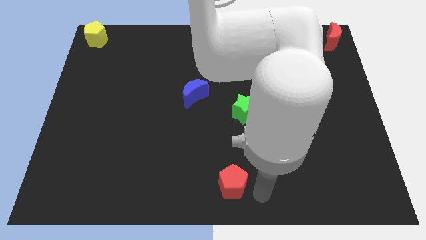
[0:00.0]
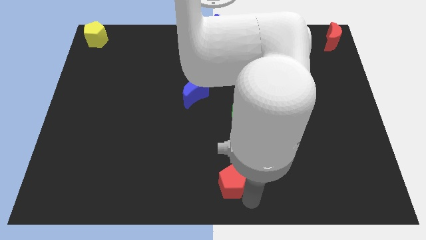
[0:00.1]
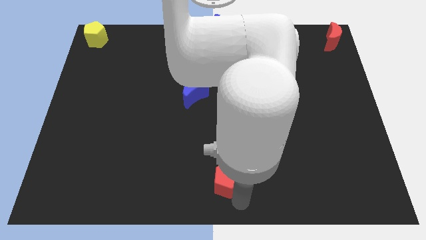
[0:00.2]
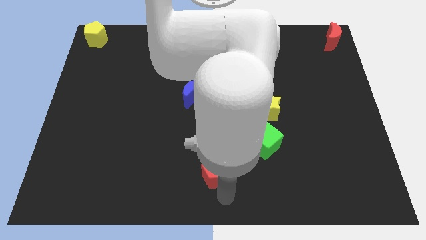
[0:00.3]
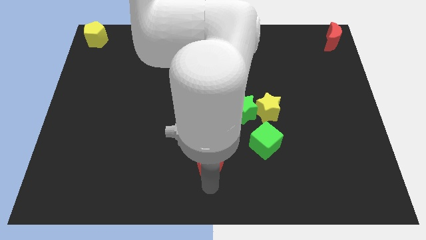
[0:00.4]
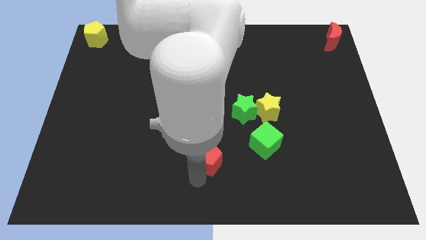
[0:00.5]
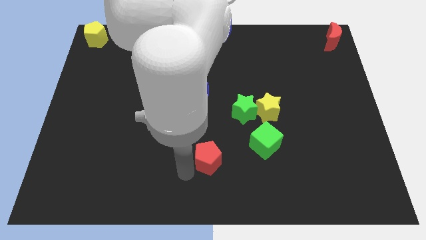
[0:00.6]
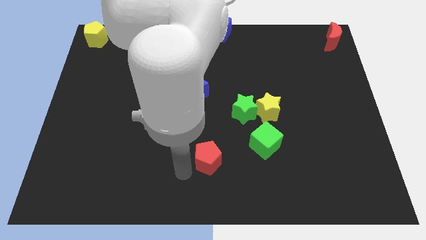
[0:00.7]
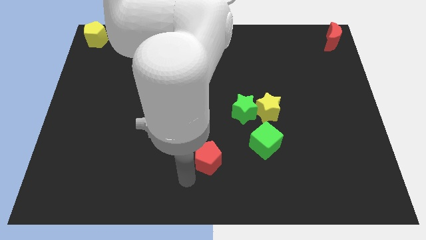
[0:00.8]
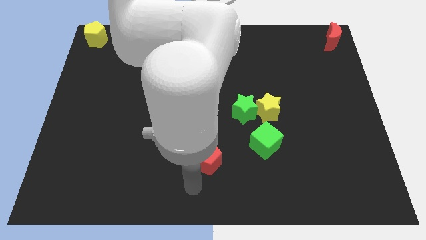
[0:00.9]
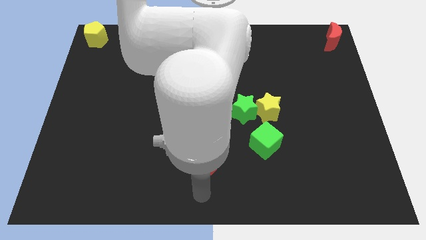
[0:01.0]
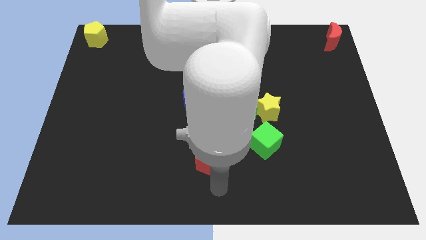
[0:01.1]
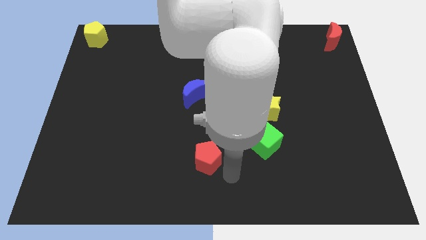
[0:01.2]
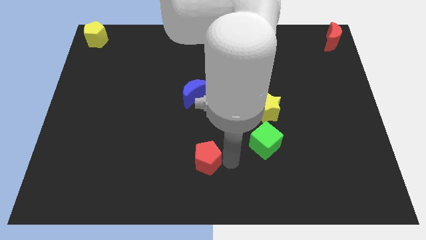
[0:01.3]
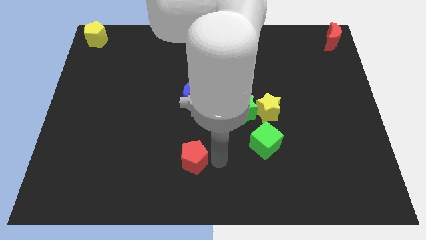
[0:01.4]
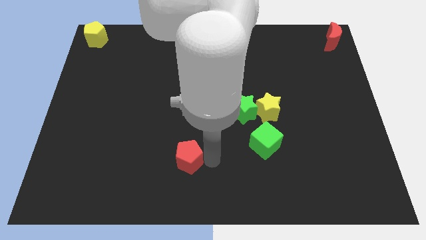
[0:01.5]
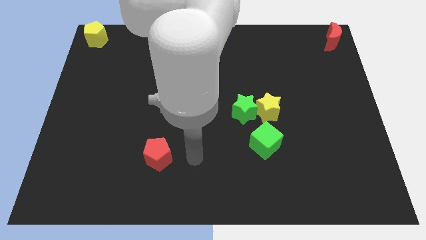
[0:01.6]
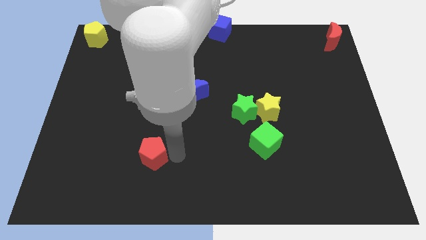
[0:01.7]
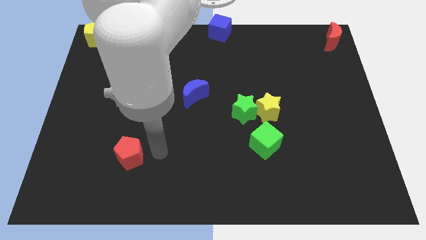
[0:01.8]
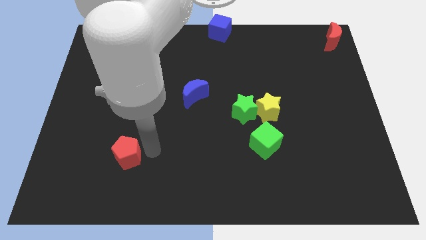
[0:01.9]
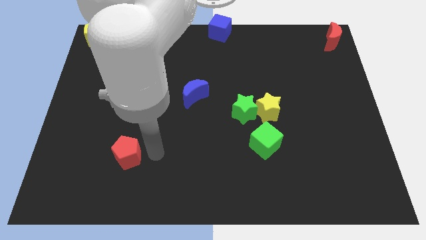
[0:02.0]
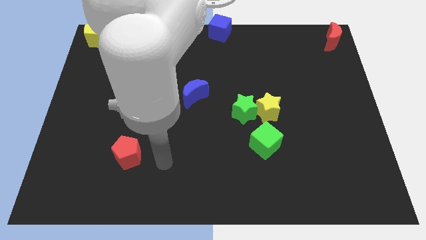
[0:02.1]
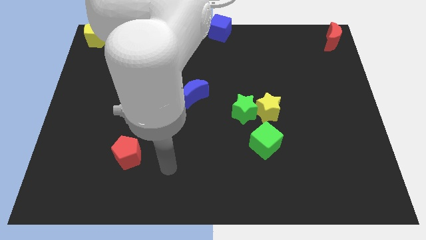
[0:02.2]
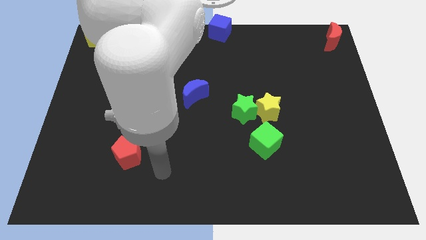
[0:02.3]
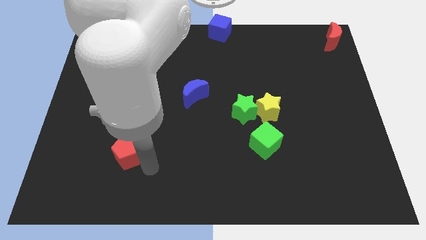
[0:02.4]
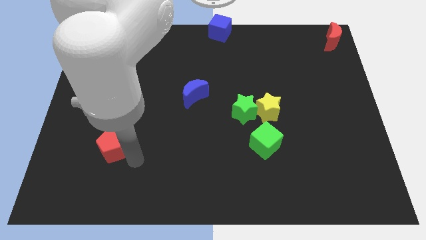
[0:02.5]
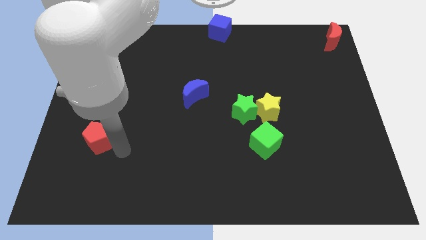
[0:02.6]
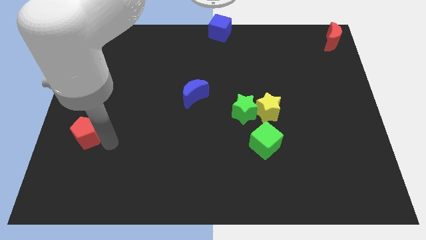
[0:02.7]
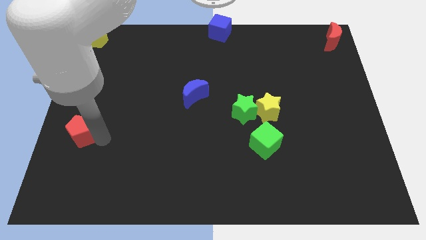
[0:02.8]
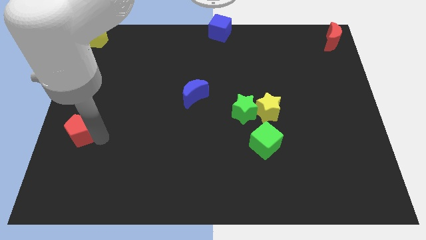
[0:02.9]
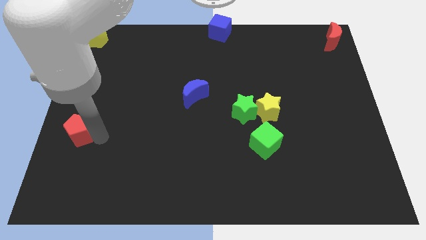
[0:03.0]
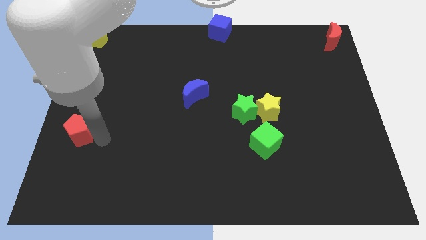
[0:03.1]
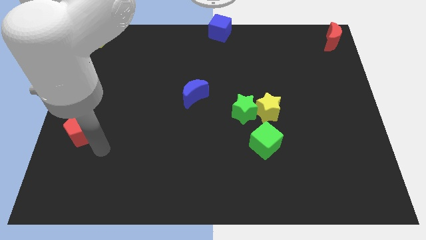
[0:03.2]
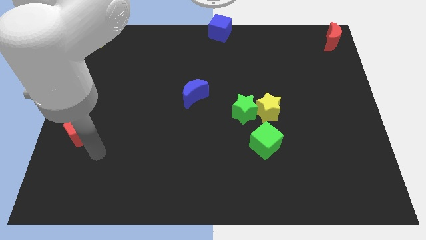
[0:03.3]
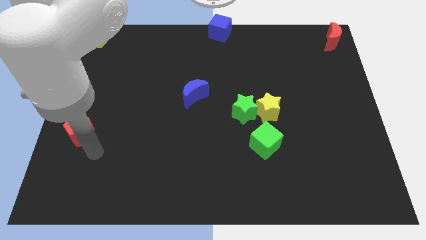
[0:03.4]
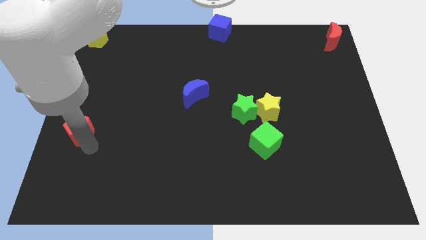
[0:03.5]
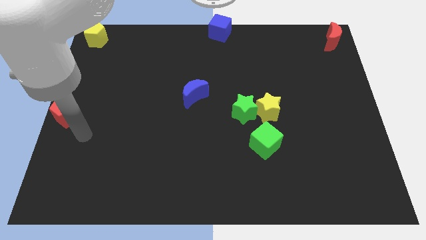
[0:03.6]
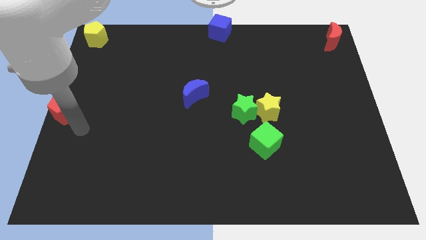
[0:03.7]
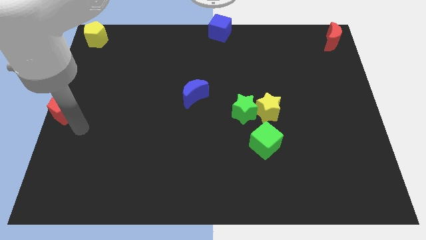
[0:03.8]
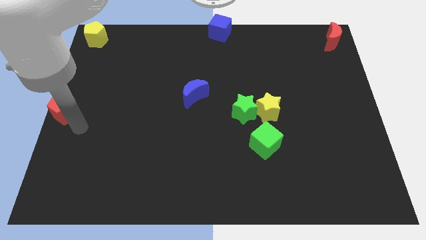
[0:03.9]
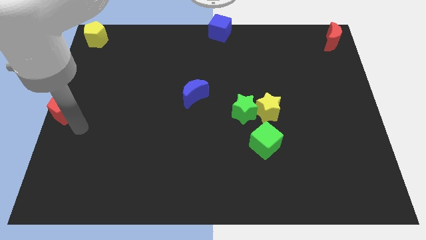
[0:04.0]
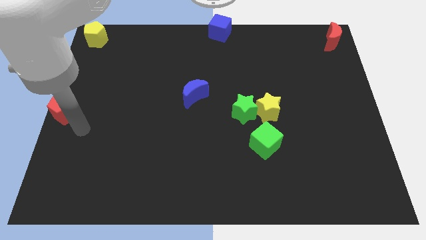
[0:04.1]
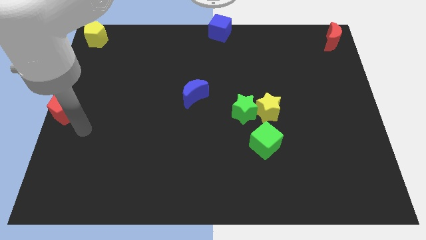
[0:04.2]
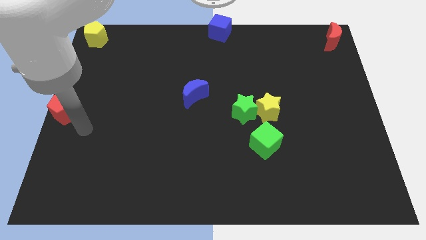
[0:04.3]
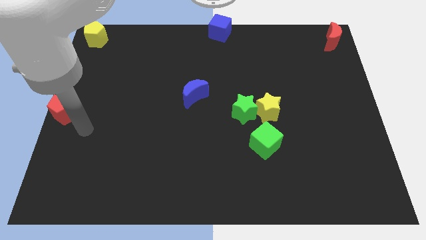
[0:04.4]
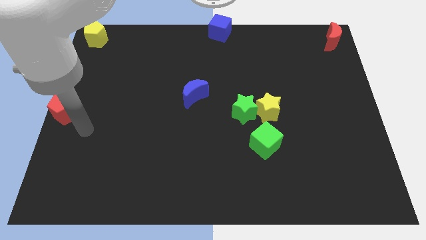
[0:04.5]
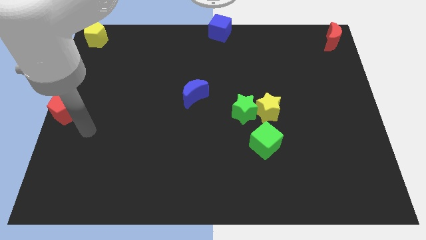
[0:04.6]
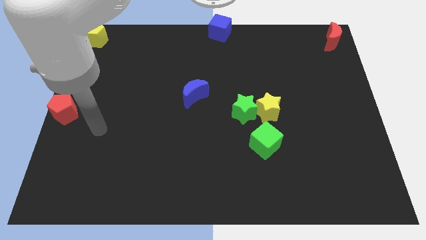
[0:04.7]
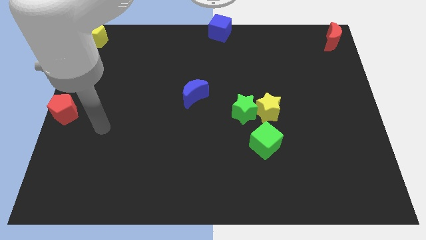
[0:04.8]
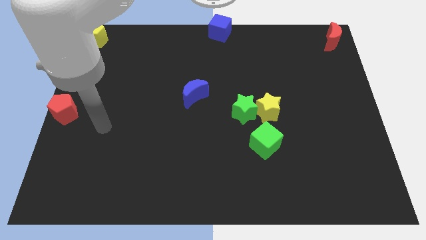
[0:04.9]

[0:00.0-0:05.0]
place the red pentagon at the left center of the board

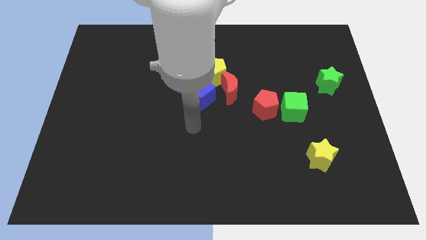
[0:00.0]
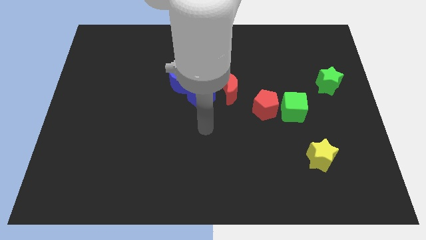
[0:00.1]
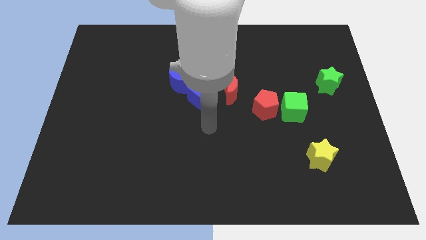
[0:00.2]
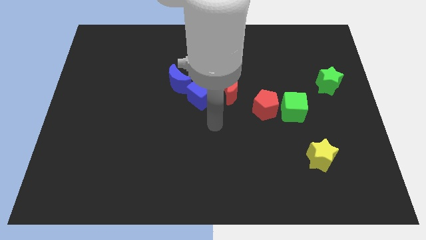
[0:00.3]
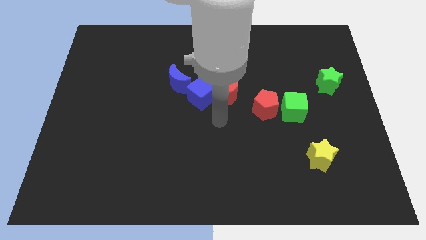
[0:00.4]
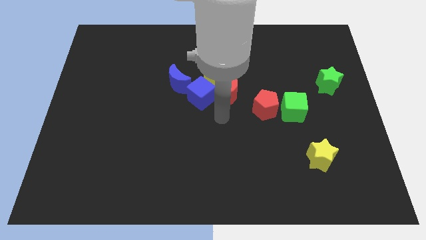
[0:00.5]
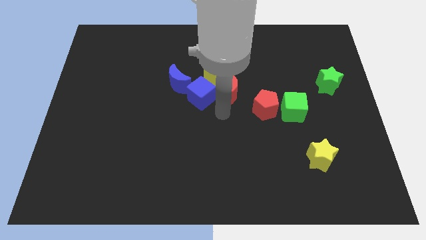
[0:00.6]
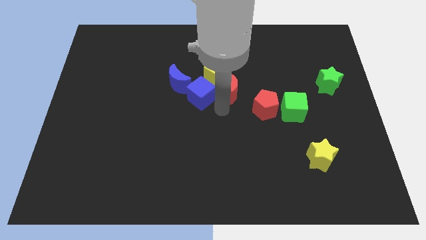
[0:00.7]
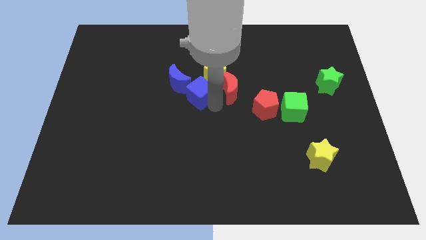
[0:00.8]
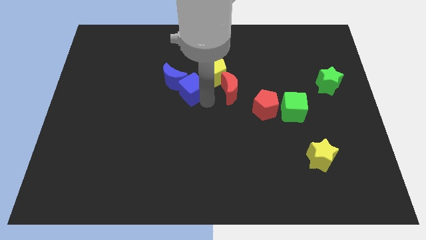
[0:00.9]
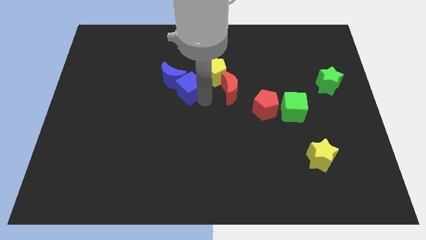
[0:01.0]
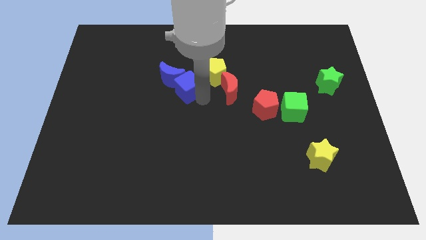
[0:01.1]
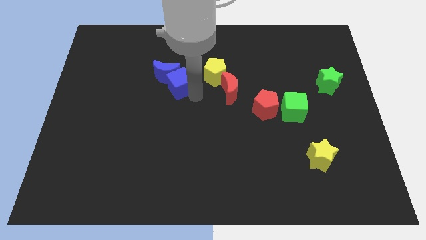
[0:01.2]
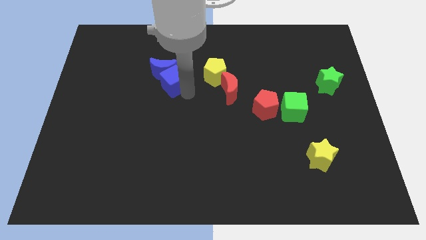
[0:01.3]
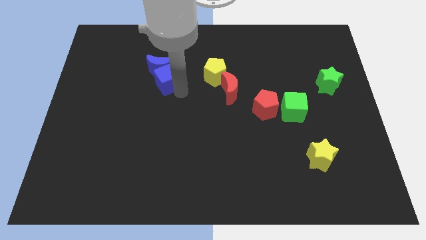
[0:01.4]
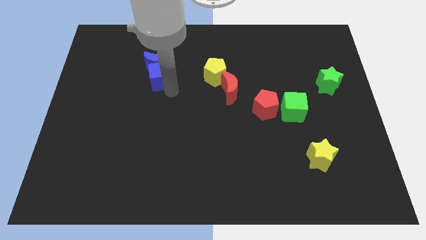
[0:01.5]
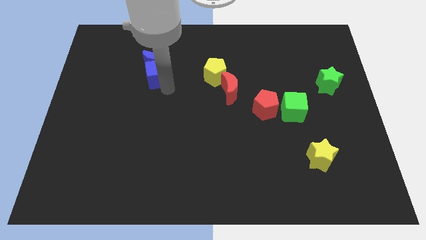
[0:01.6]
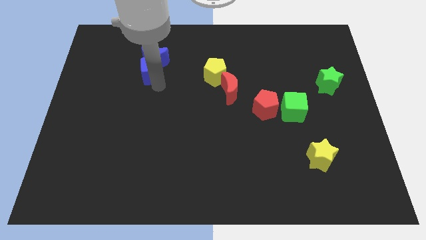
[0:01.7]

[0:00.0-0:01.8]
push the blue blocks to the top

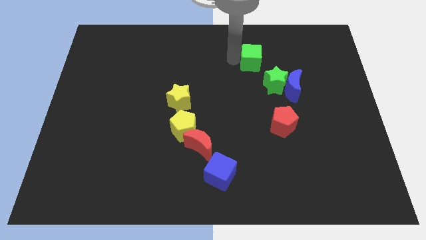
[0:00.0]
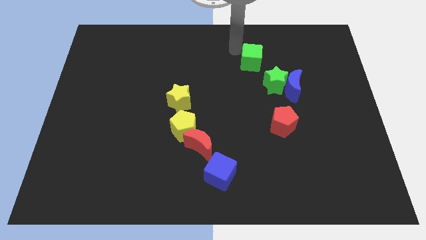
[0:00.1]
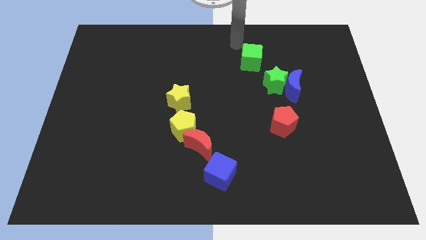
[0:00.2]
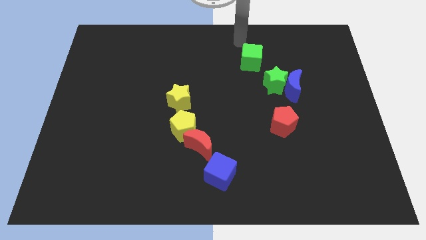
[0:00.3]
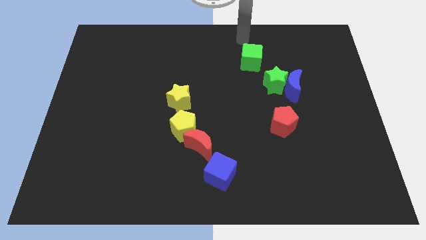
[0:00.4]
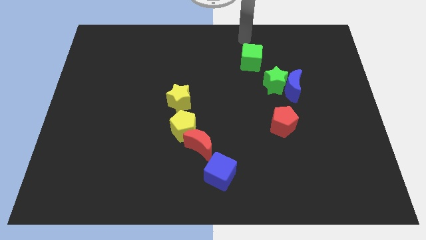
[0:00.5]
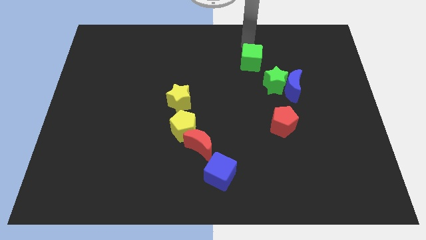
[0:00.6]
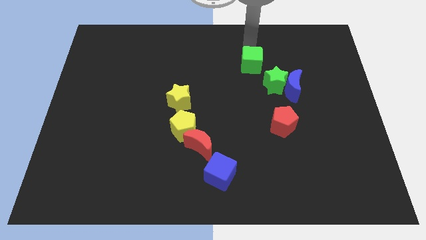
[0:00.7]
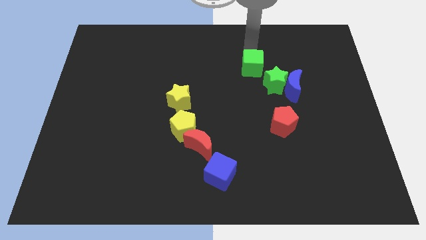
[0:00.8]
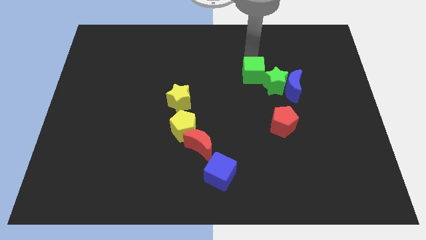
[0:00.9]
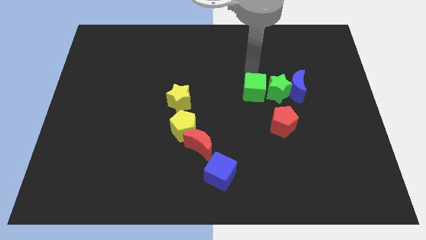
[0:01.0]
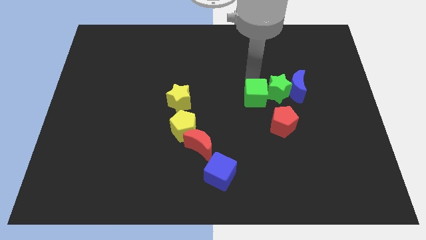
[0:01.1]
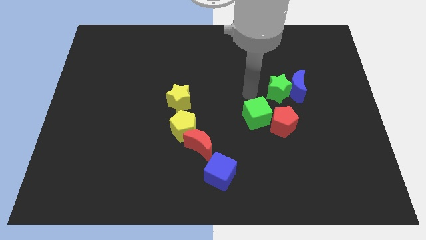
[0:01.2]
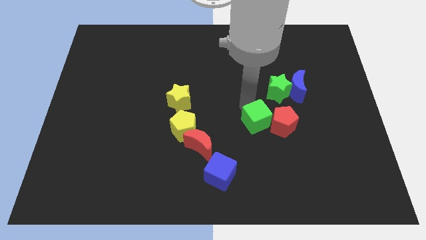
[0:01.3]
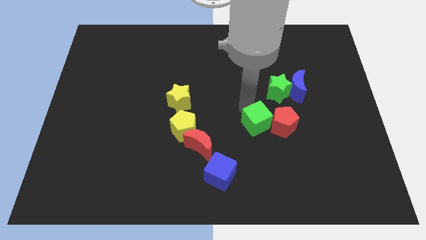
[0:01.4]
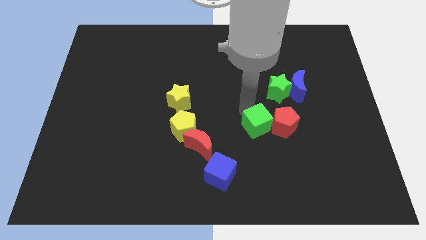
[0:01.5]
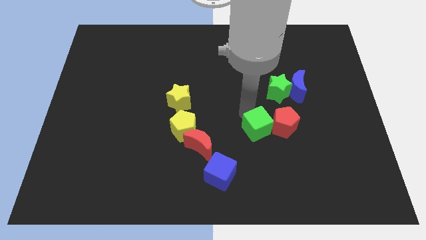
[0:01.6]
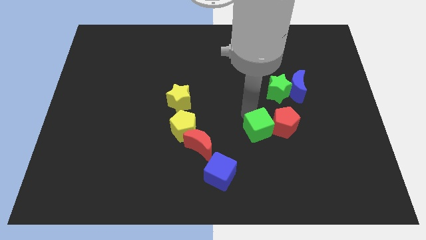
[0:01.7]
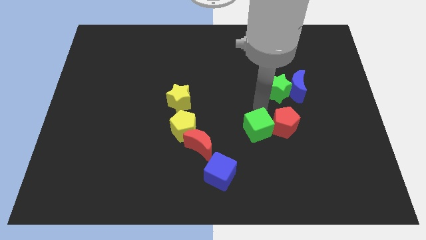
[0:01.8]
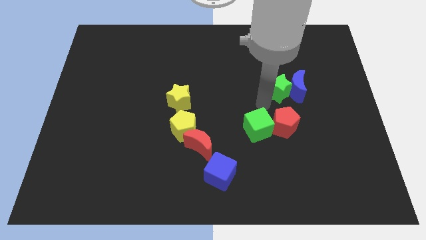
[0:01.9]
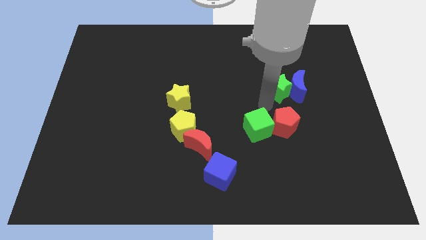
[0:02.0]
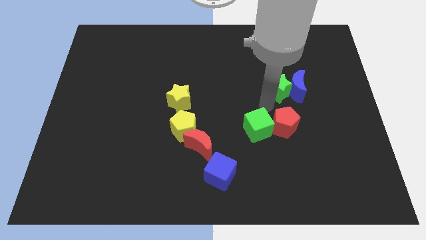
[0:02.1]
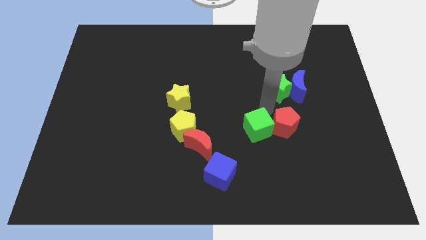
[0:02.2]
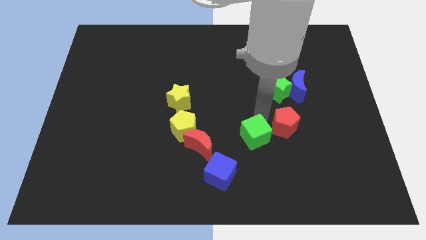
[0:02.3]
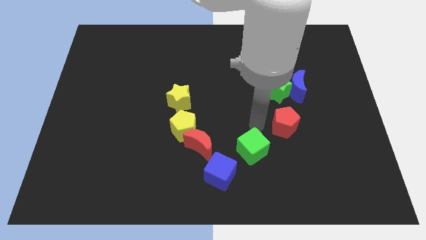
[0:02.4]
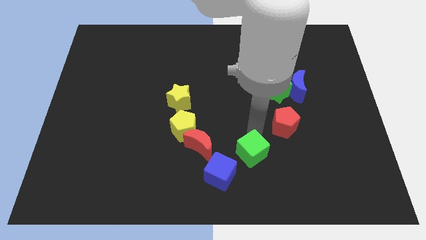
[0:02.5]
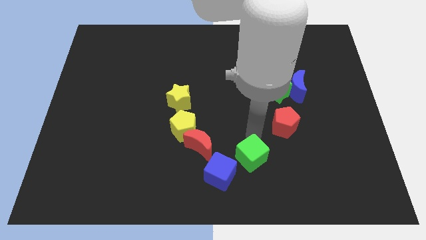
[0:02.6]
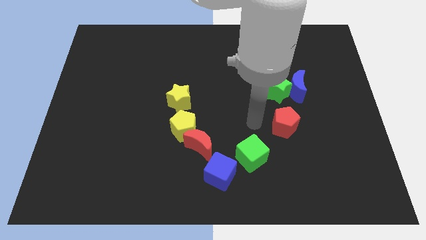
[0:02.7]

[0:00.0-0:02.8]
move the green cube close to the top right side of the blue cube
